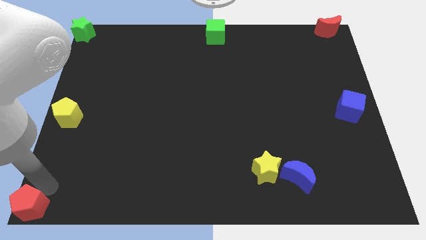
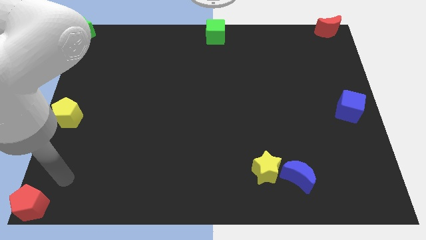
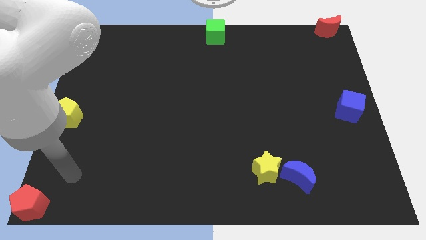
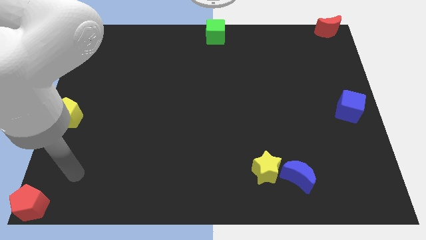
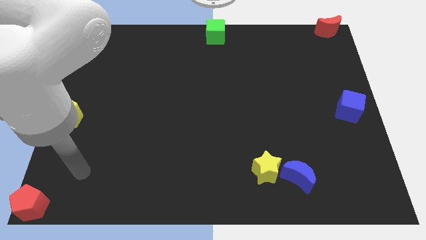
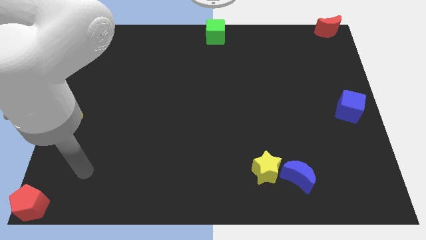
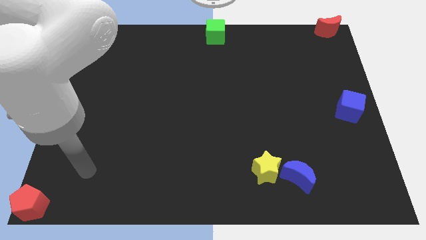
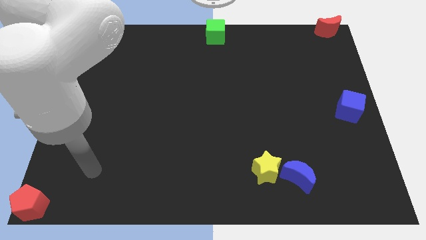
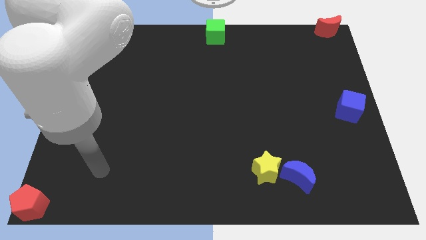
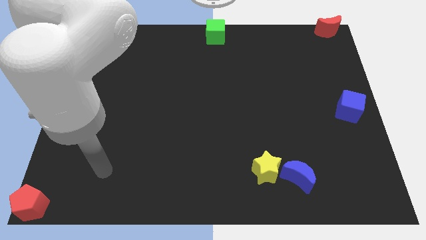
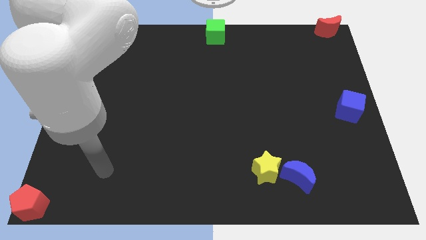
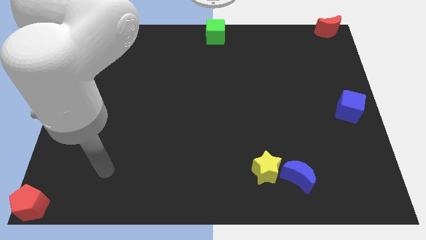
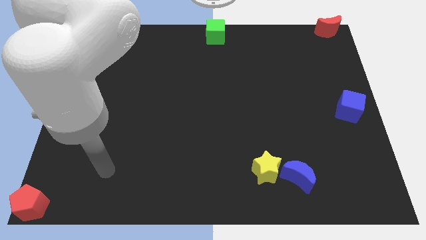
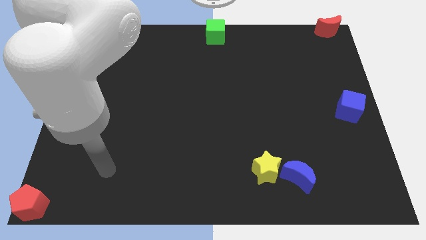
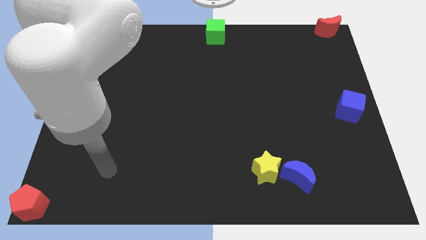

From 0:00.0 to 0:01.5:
move your arm away from red pentagon

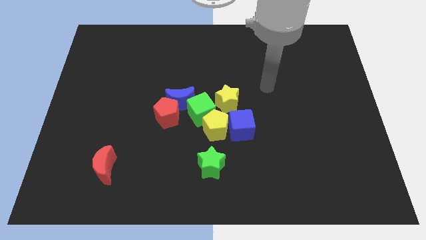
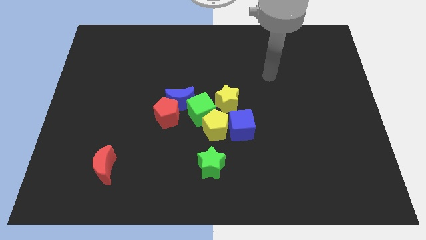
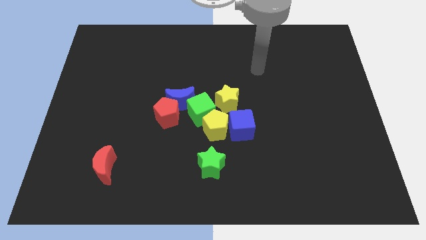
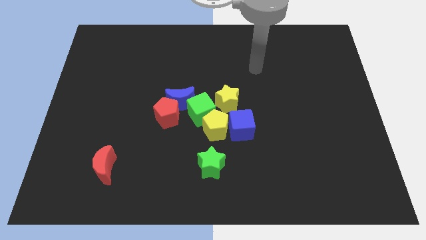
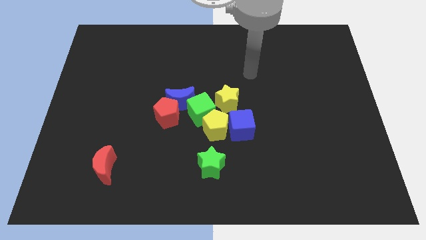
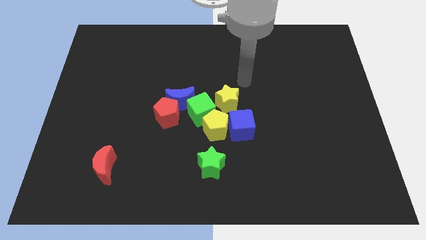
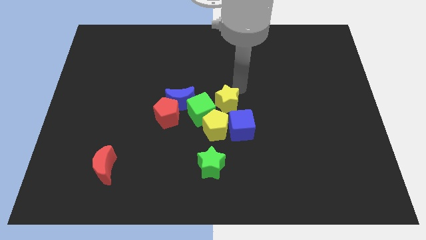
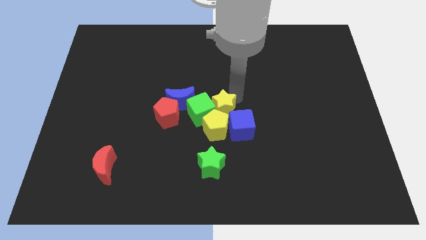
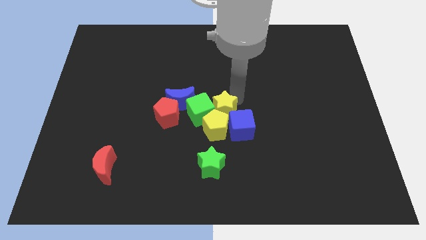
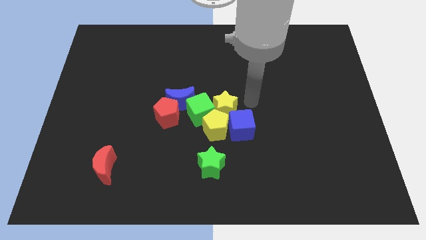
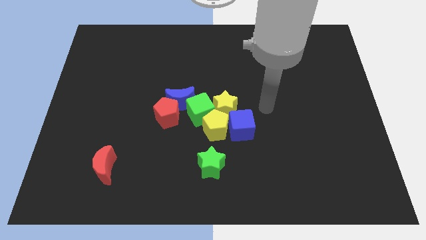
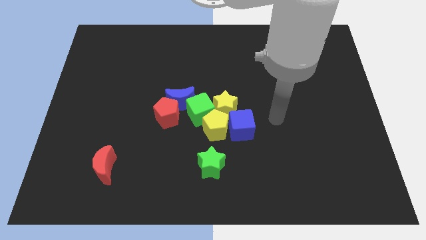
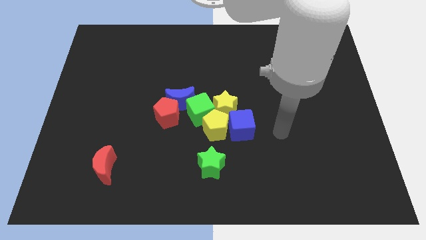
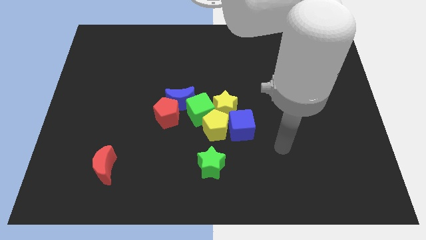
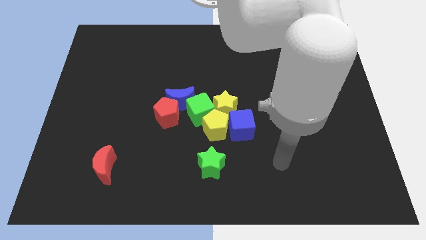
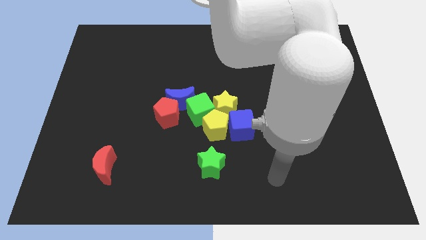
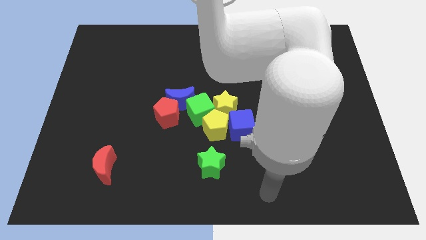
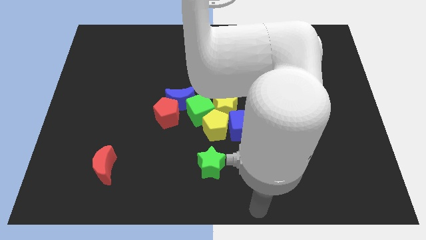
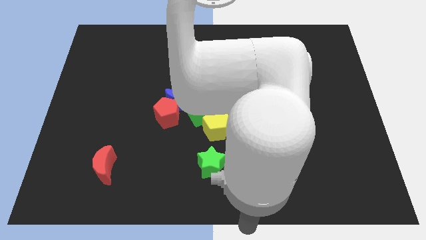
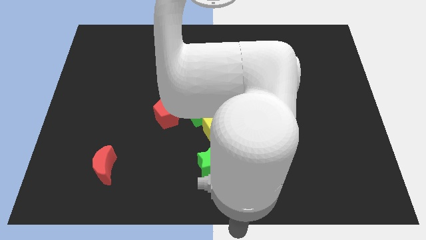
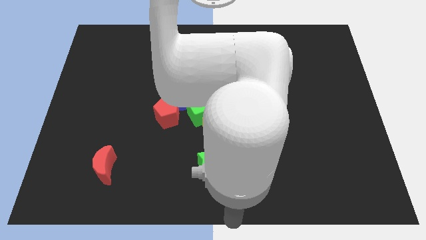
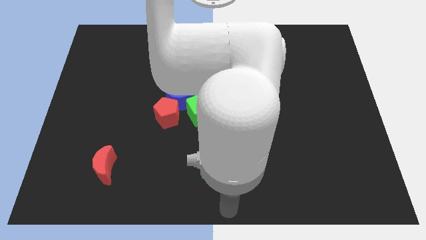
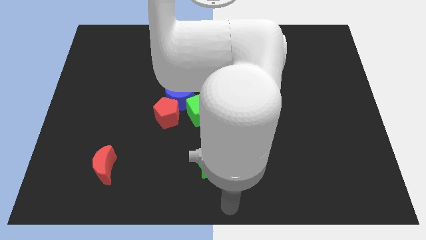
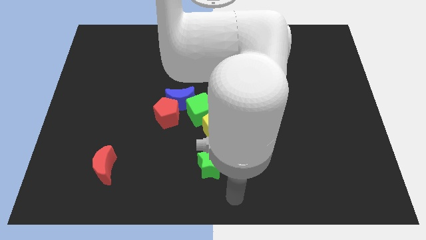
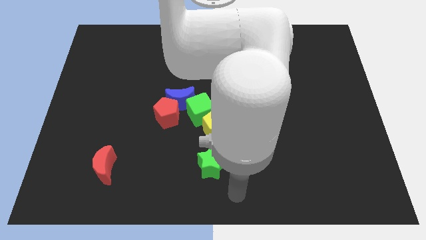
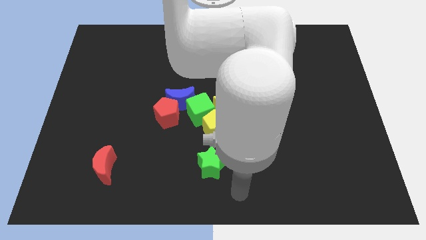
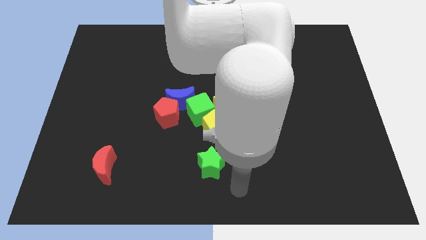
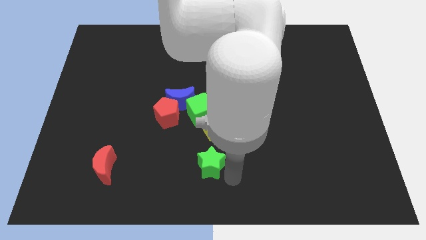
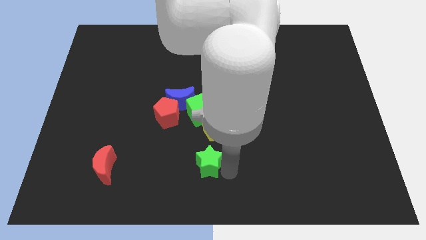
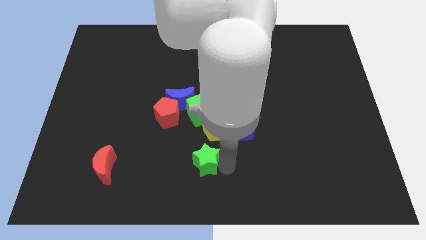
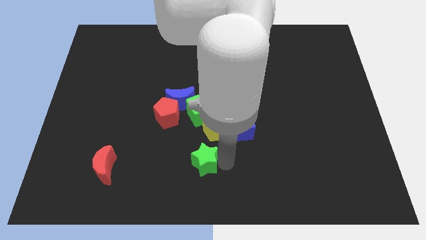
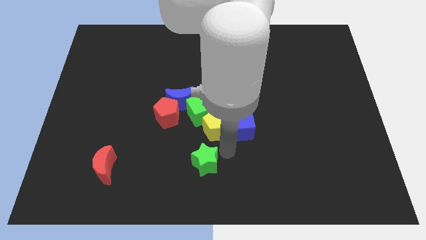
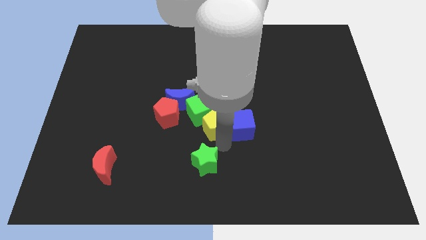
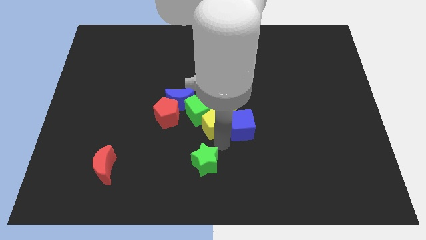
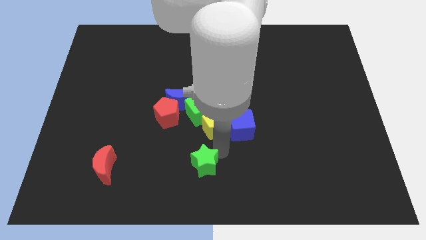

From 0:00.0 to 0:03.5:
place your arm below the yellow pentagon

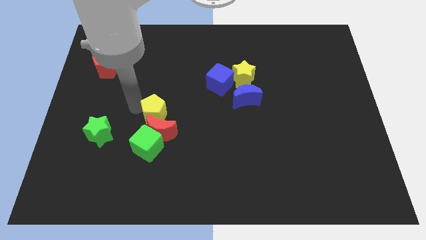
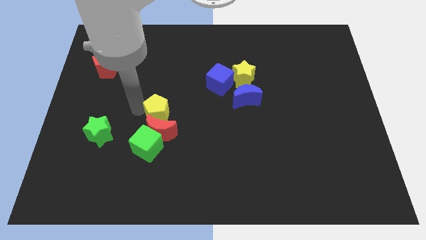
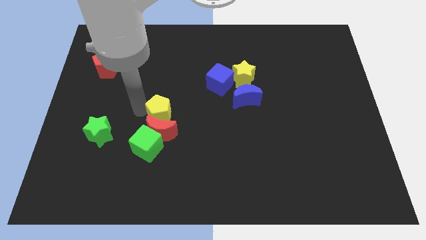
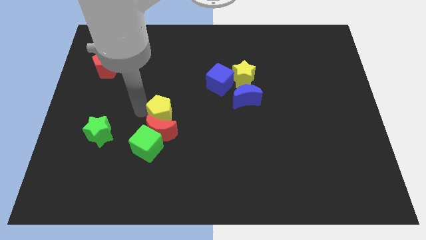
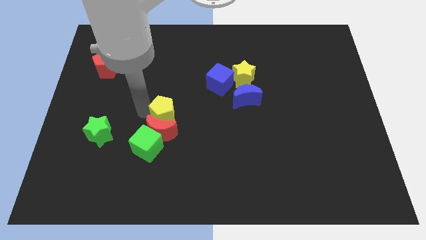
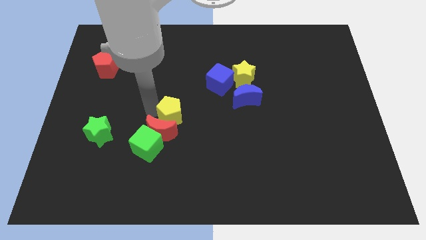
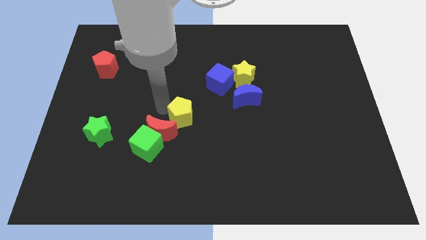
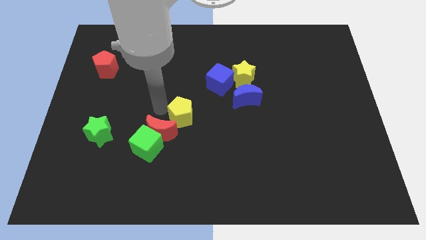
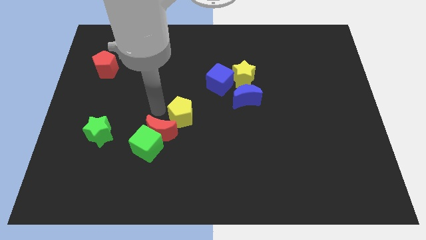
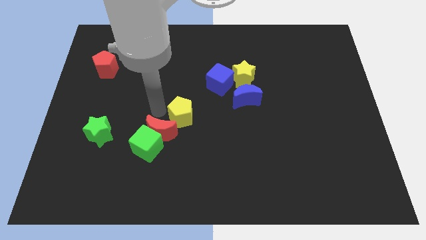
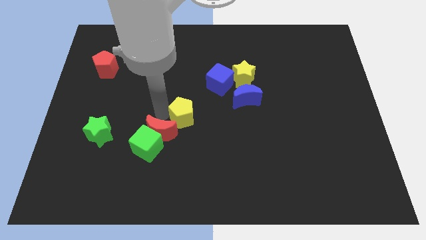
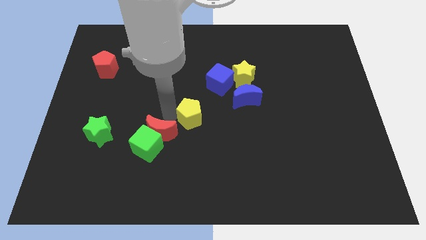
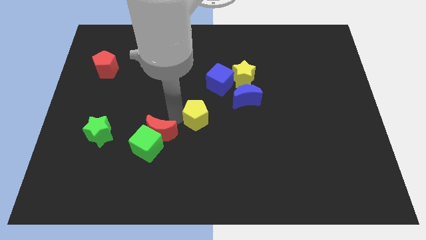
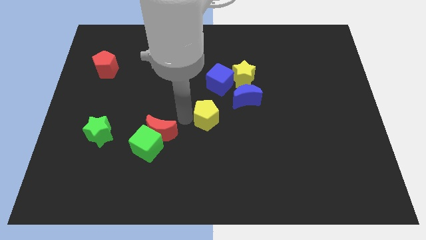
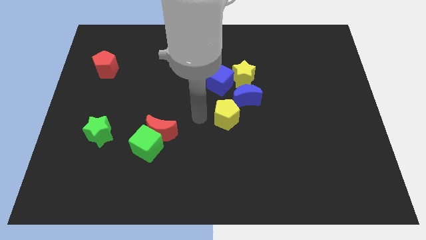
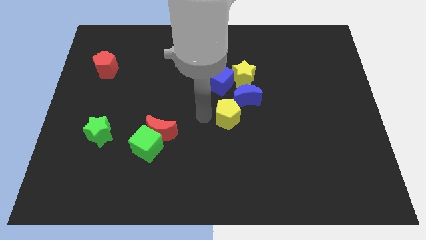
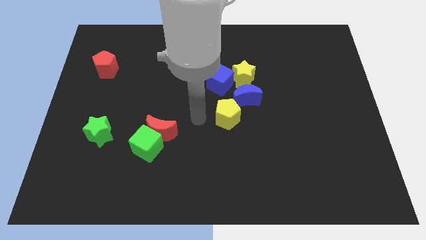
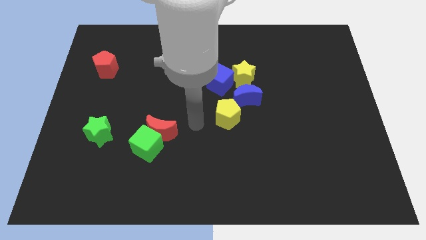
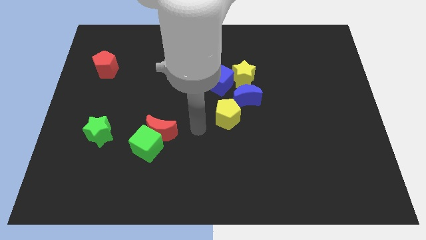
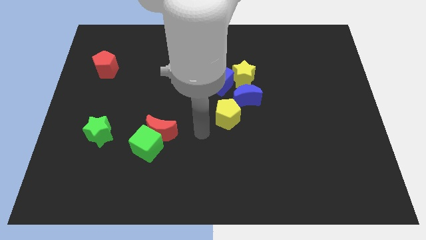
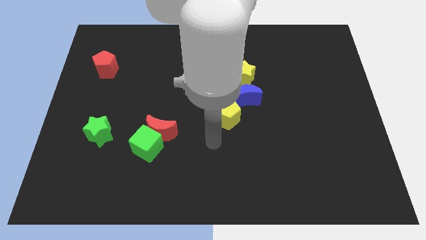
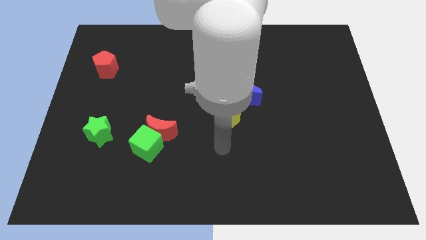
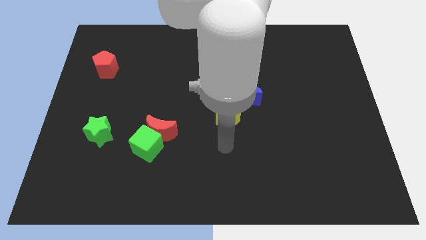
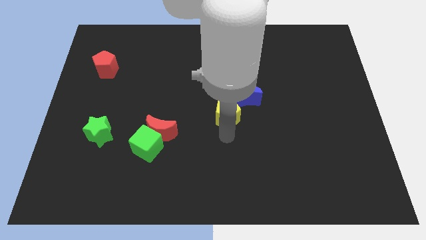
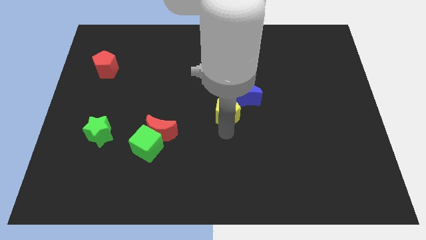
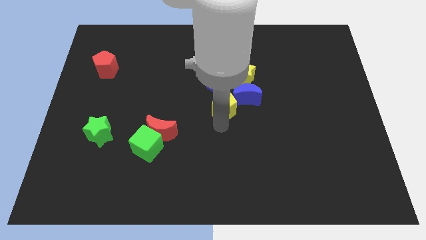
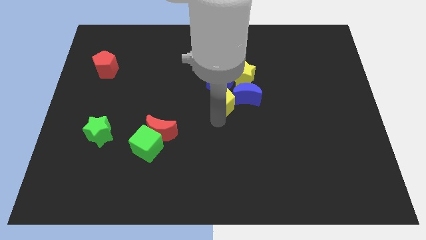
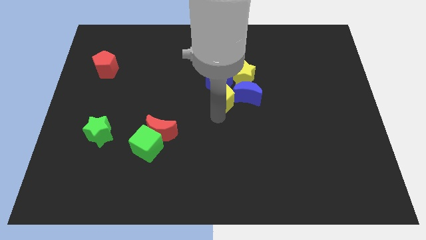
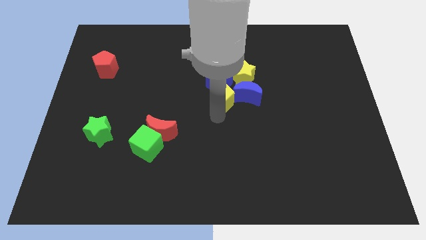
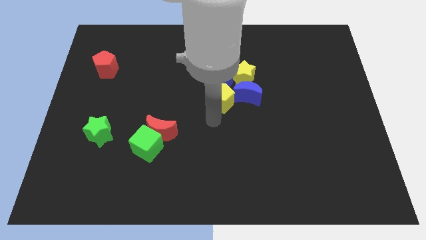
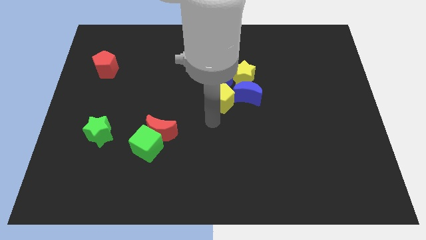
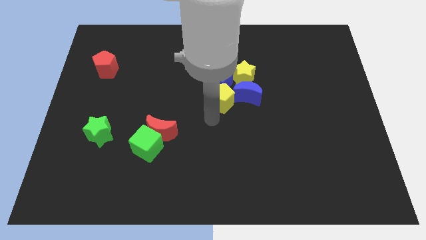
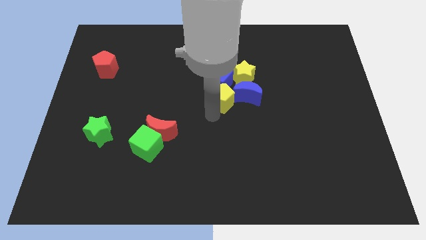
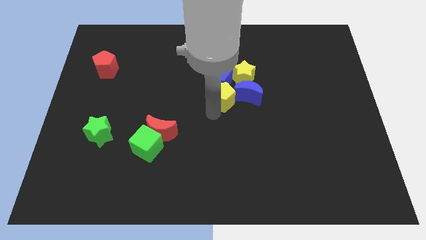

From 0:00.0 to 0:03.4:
push the yellow pentagon towards the blue blocks

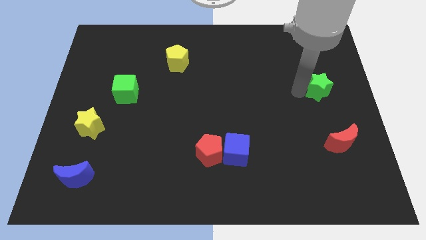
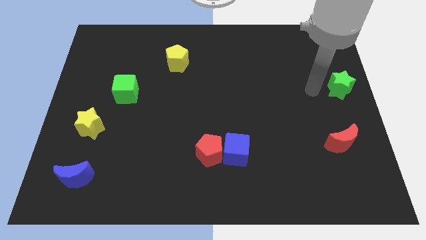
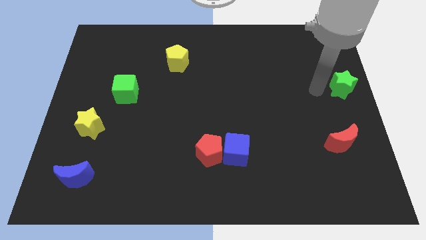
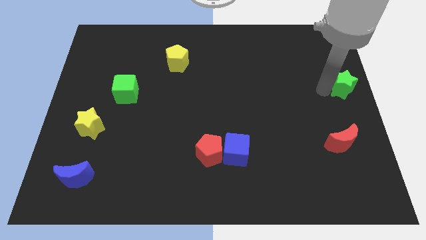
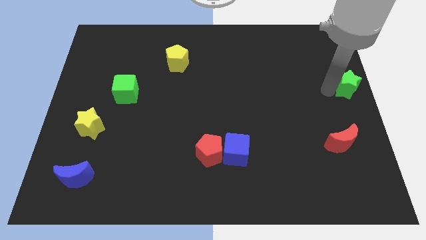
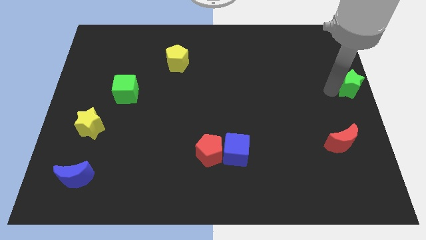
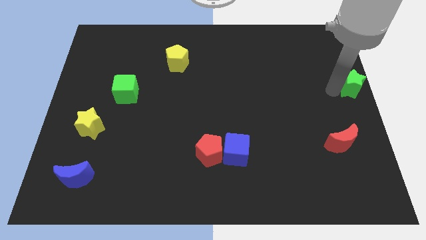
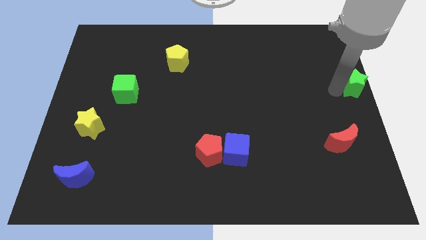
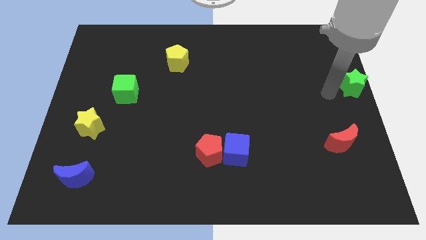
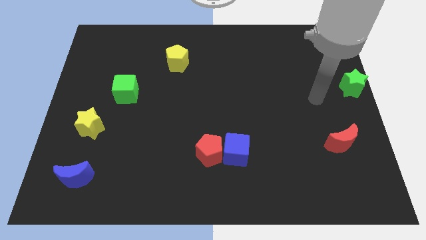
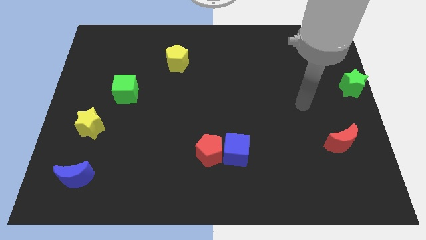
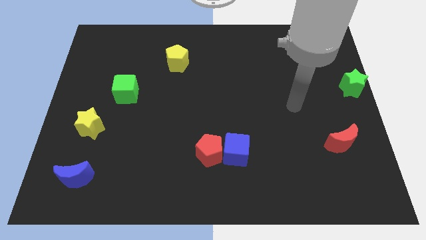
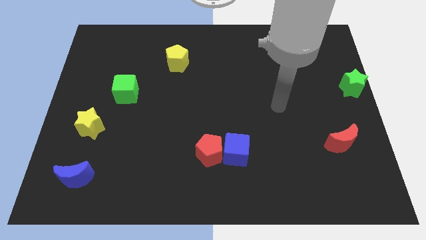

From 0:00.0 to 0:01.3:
move the green star on to the top right of the red crescent
